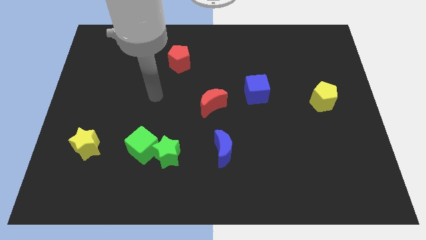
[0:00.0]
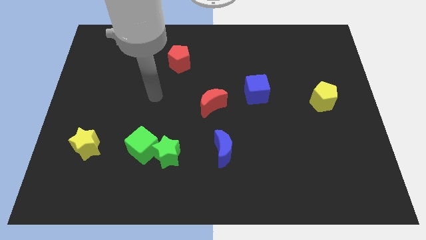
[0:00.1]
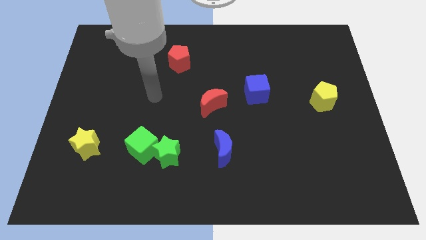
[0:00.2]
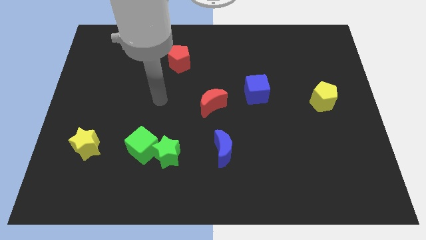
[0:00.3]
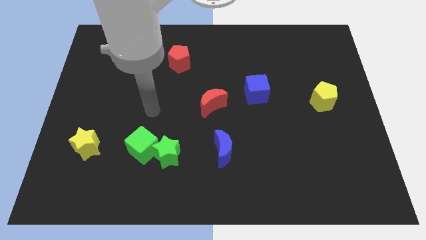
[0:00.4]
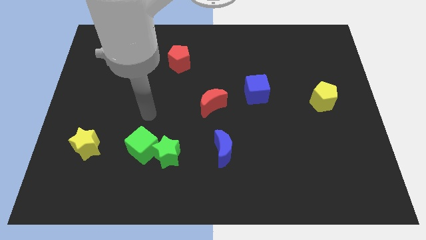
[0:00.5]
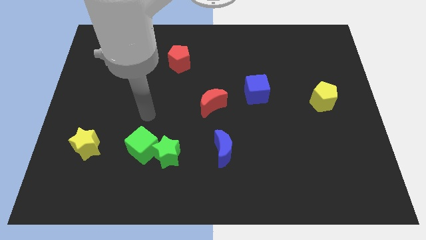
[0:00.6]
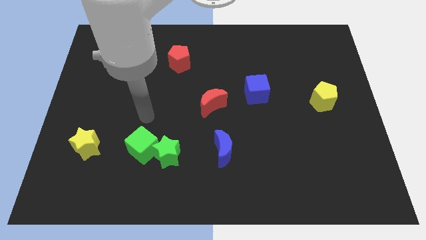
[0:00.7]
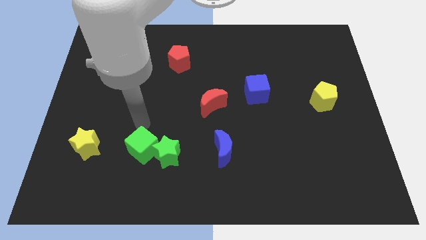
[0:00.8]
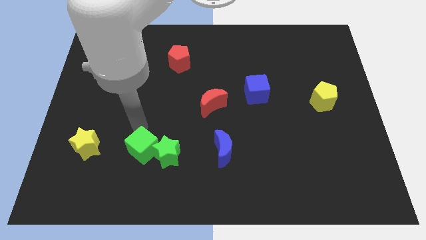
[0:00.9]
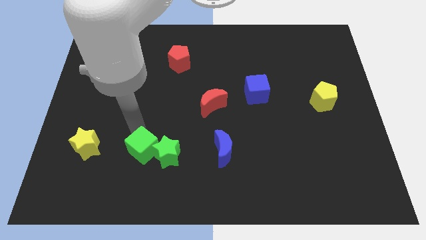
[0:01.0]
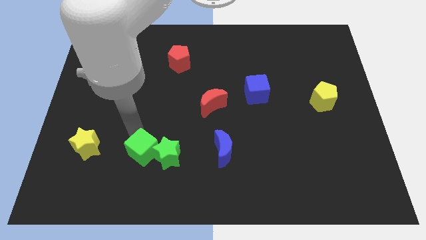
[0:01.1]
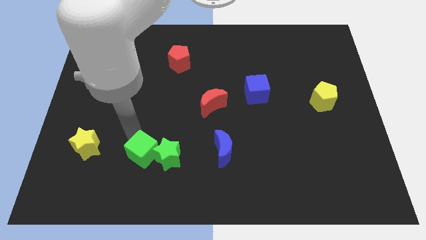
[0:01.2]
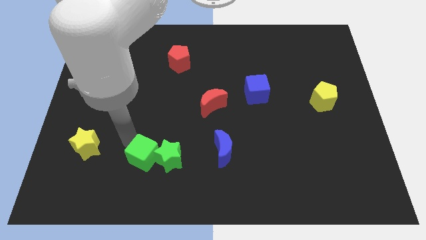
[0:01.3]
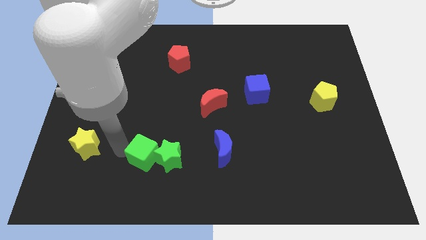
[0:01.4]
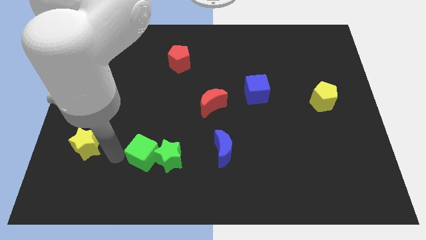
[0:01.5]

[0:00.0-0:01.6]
point your arm between green cube and yellow star

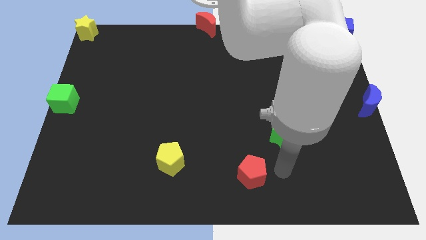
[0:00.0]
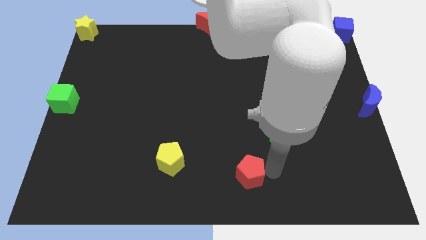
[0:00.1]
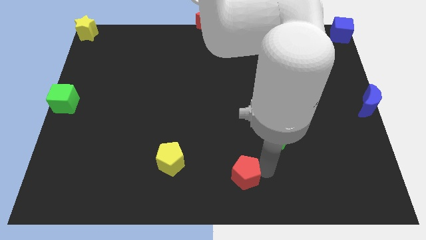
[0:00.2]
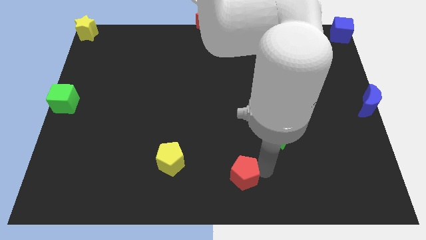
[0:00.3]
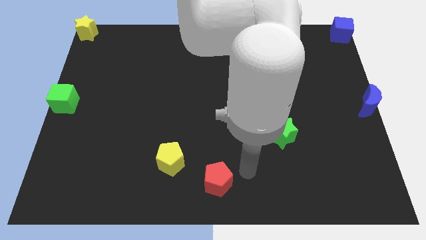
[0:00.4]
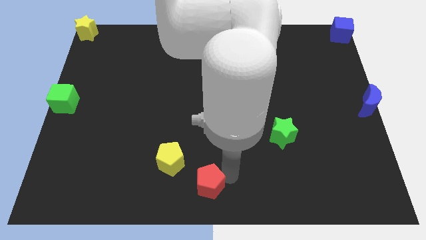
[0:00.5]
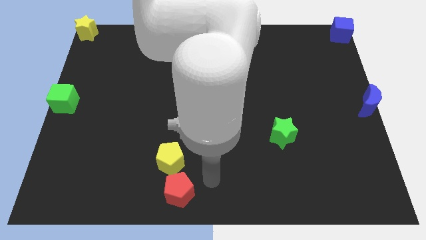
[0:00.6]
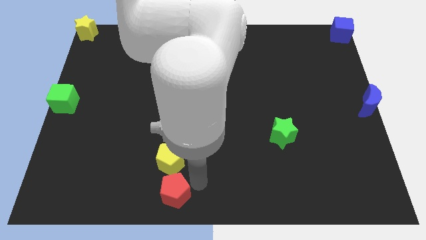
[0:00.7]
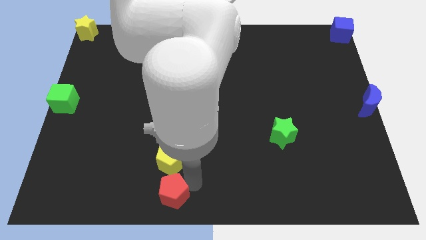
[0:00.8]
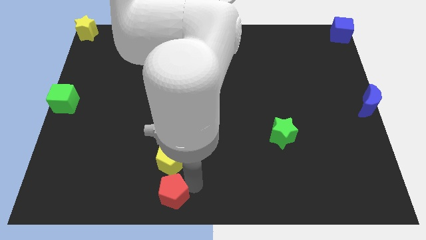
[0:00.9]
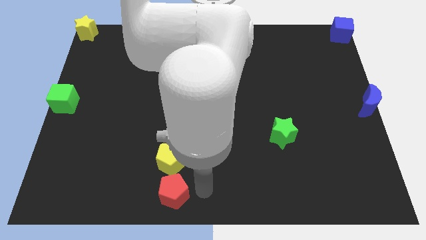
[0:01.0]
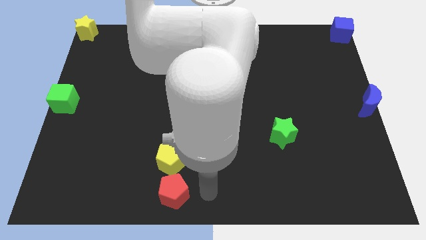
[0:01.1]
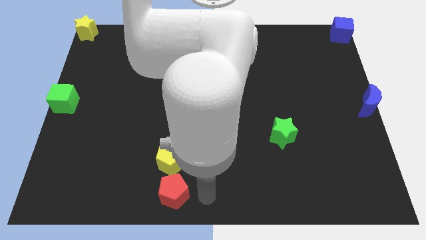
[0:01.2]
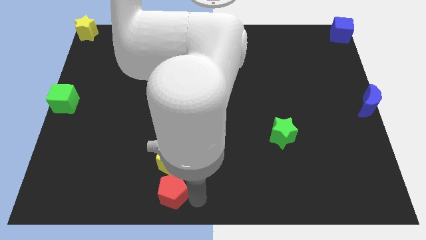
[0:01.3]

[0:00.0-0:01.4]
move the red pentagon below the yellow pentagon

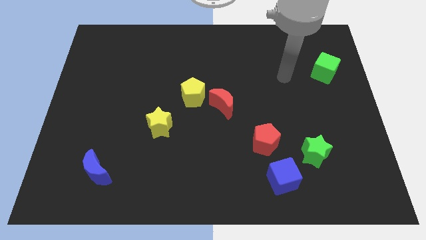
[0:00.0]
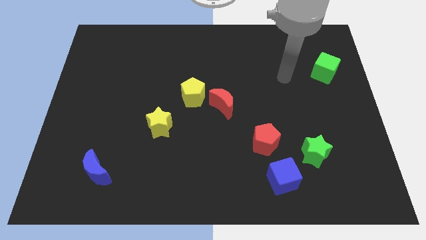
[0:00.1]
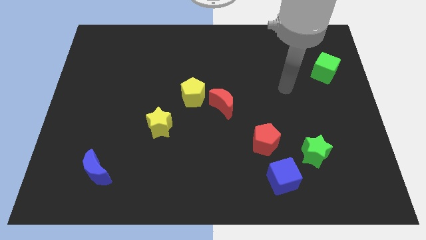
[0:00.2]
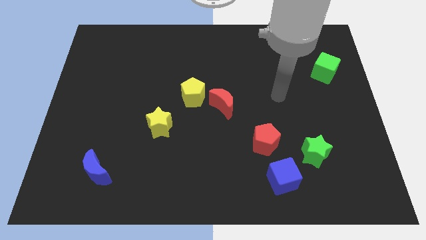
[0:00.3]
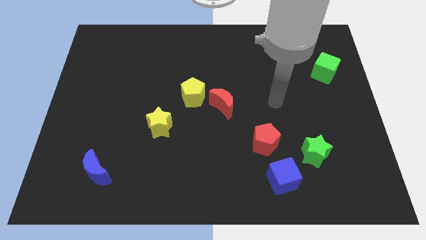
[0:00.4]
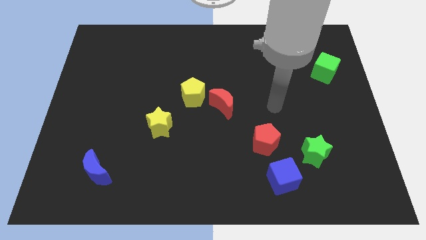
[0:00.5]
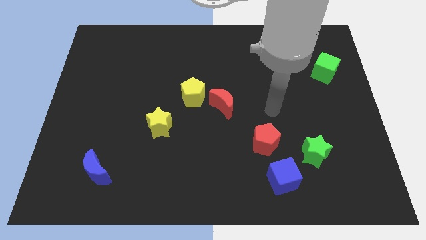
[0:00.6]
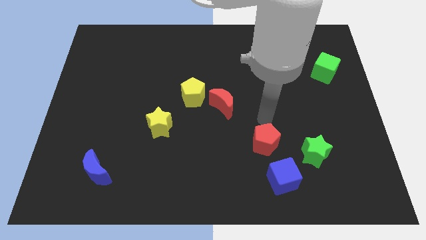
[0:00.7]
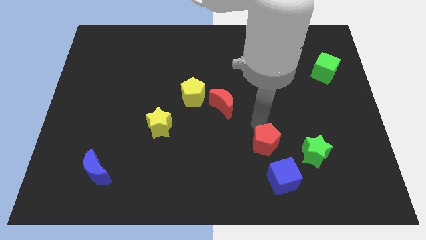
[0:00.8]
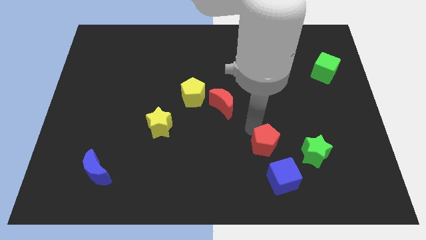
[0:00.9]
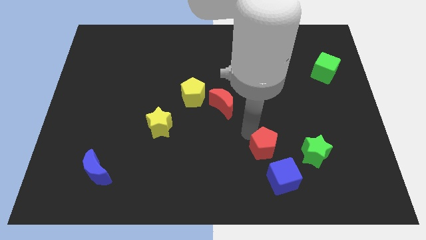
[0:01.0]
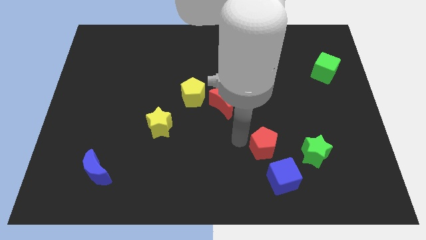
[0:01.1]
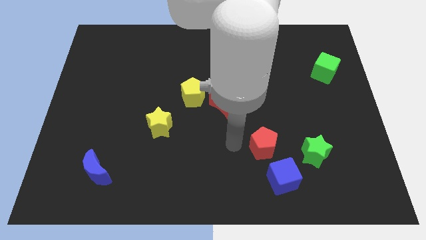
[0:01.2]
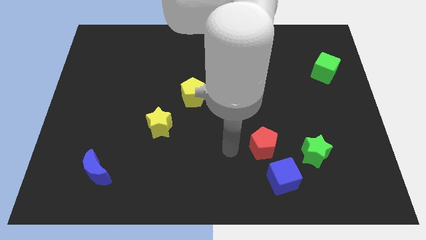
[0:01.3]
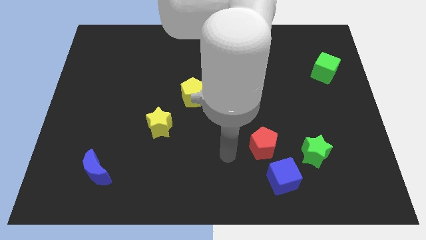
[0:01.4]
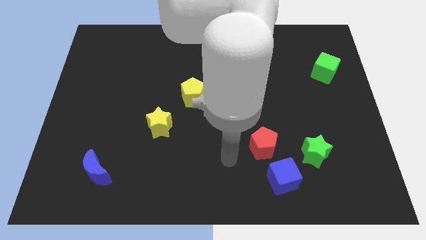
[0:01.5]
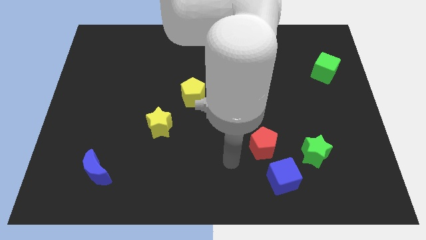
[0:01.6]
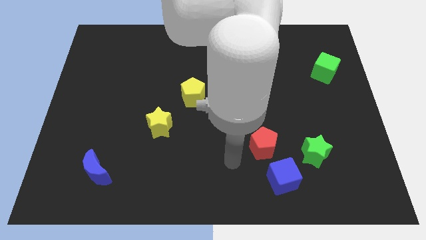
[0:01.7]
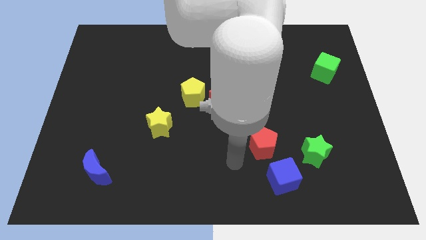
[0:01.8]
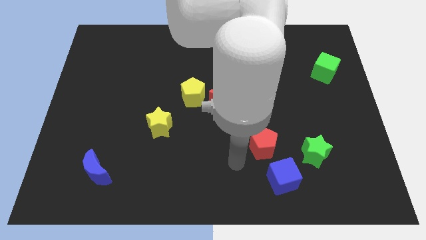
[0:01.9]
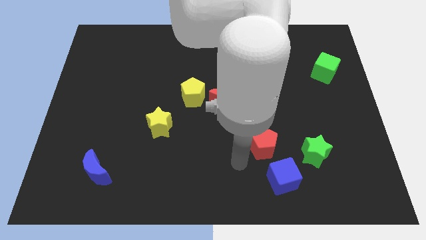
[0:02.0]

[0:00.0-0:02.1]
touch the red pentagon with your arm

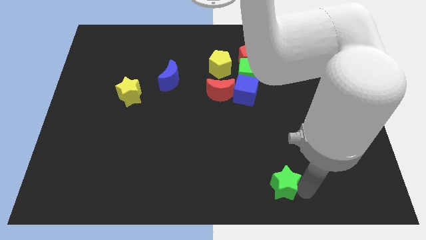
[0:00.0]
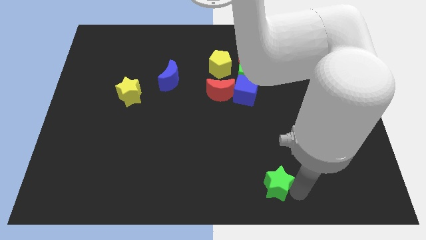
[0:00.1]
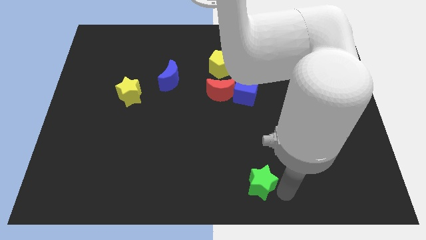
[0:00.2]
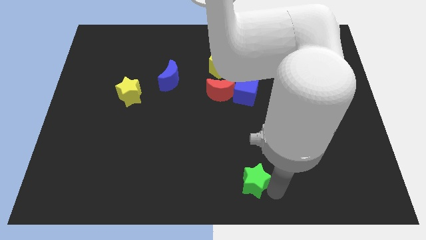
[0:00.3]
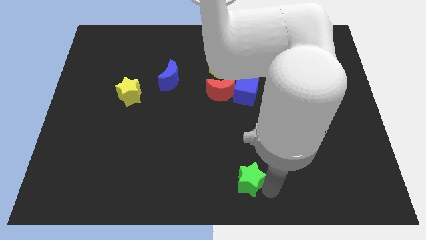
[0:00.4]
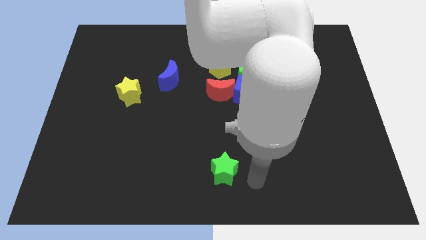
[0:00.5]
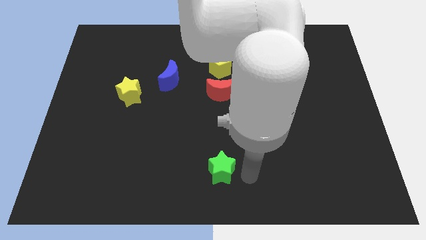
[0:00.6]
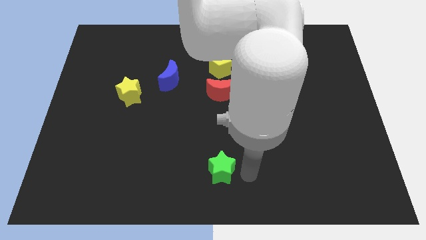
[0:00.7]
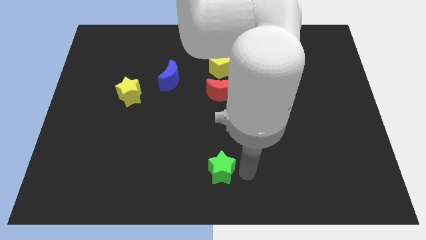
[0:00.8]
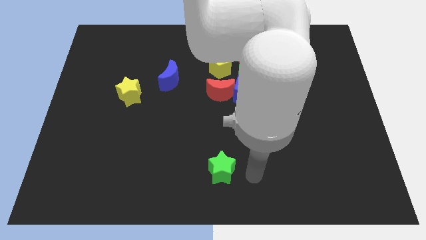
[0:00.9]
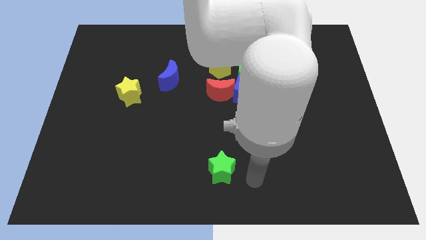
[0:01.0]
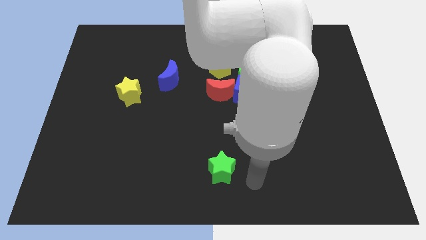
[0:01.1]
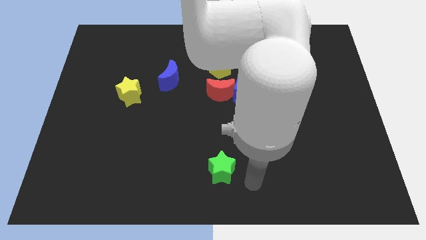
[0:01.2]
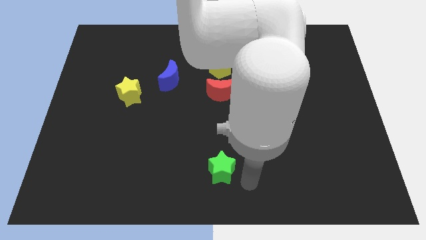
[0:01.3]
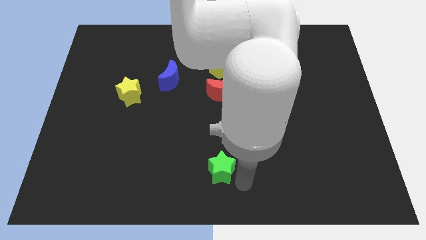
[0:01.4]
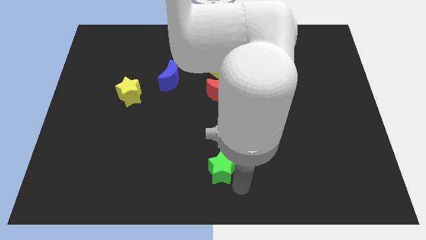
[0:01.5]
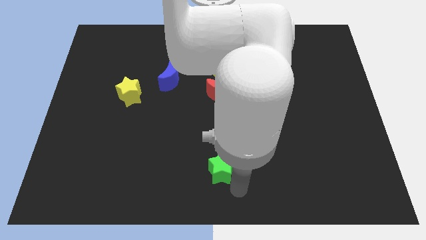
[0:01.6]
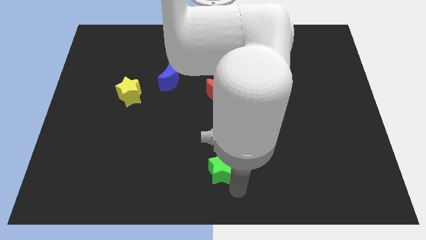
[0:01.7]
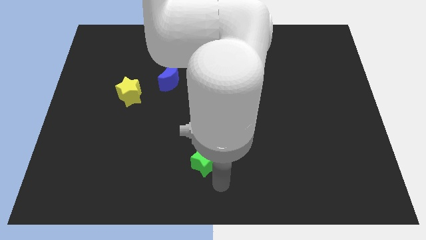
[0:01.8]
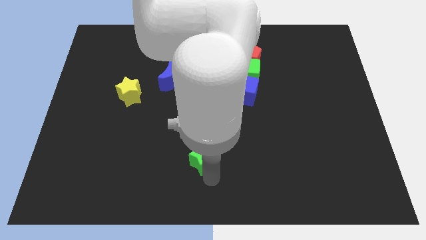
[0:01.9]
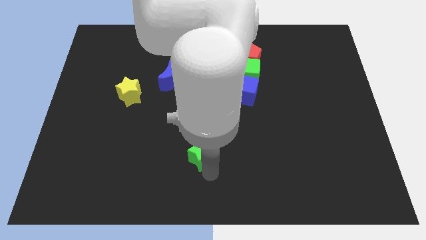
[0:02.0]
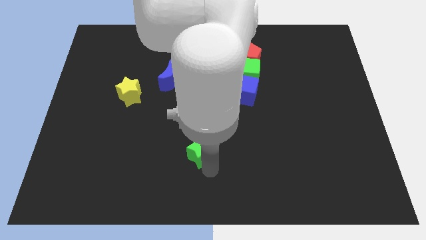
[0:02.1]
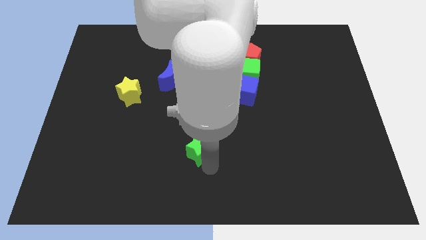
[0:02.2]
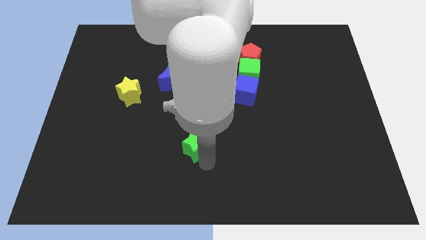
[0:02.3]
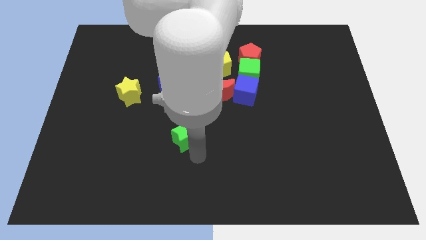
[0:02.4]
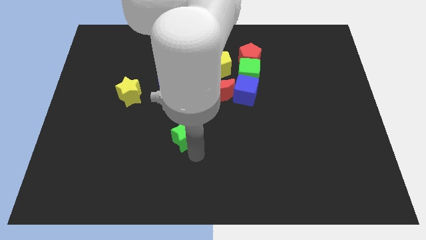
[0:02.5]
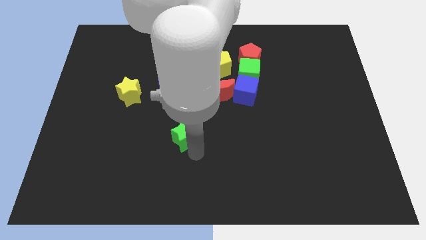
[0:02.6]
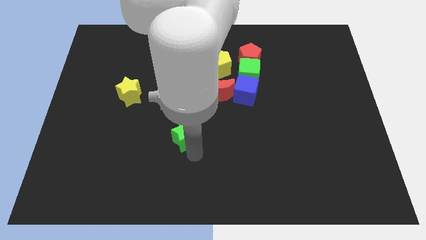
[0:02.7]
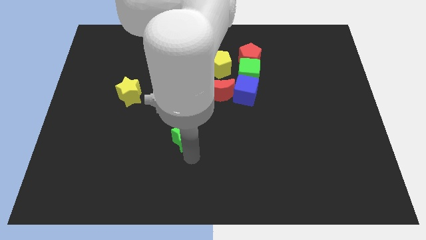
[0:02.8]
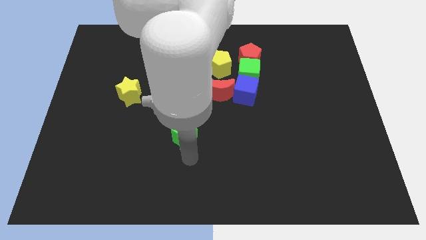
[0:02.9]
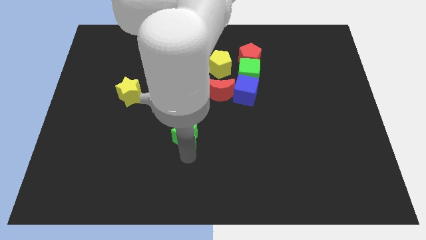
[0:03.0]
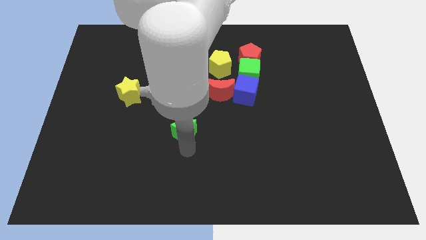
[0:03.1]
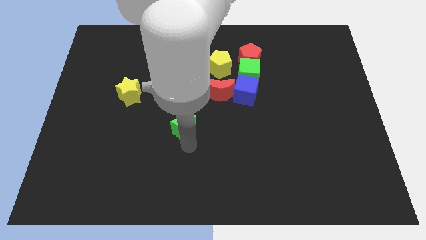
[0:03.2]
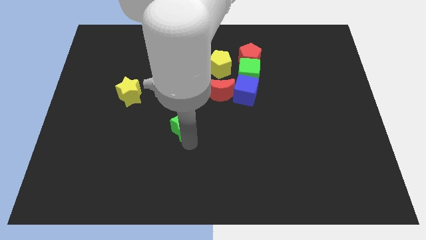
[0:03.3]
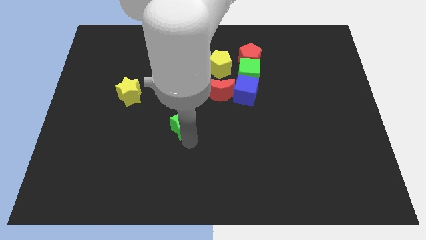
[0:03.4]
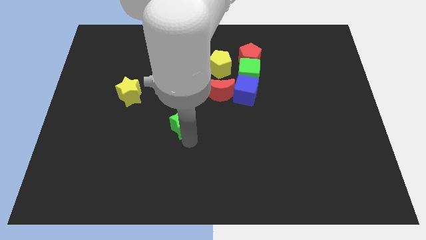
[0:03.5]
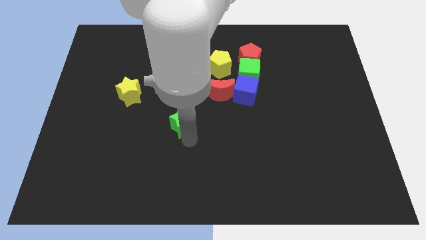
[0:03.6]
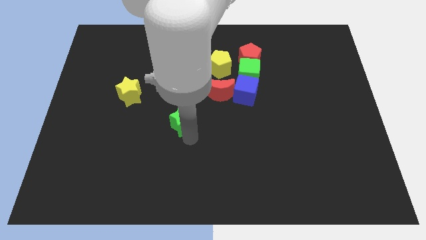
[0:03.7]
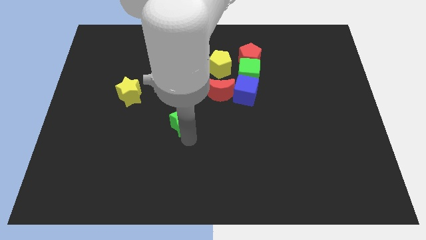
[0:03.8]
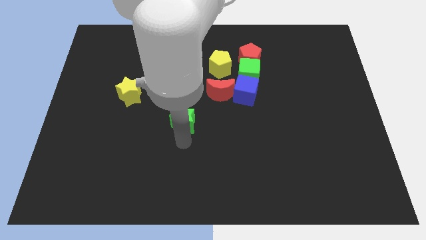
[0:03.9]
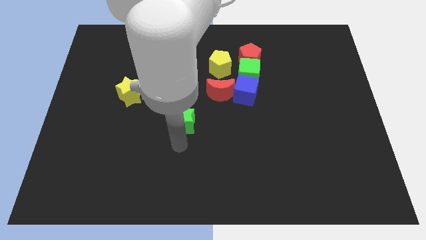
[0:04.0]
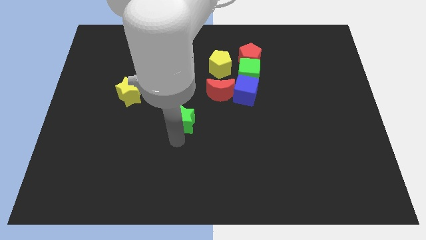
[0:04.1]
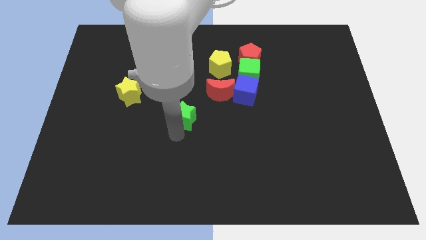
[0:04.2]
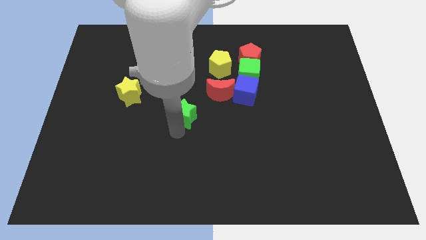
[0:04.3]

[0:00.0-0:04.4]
place the green star below the blue moon
